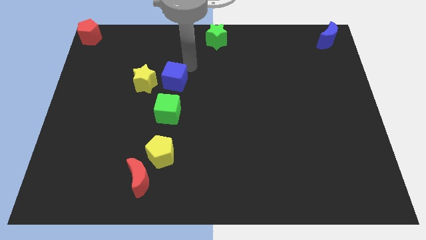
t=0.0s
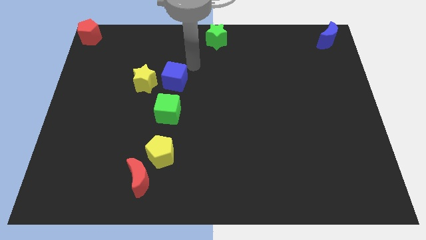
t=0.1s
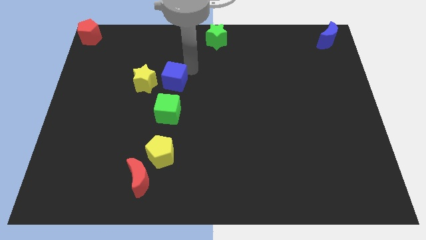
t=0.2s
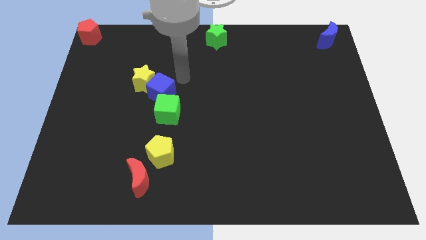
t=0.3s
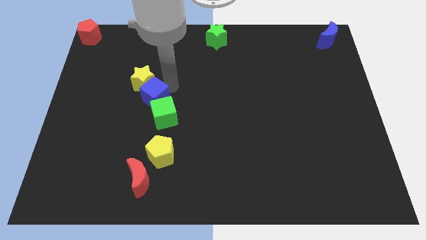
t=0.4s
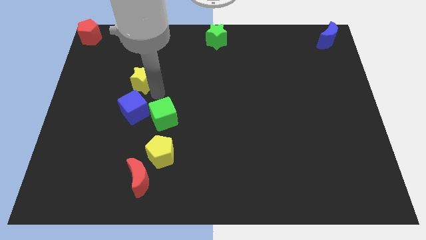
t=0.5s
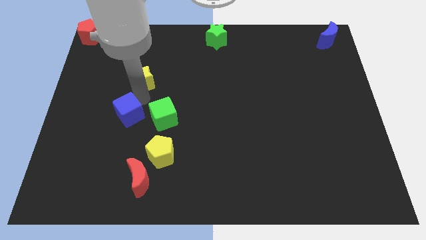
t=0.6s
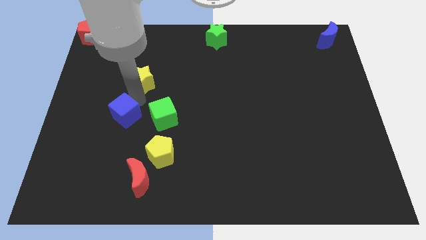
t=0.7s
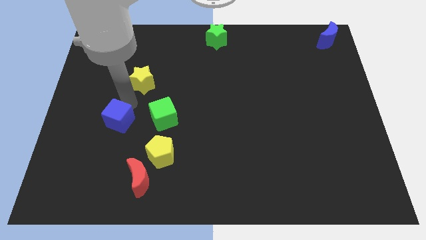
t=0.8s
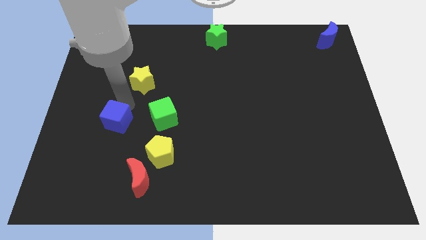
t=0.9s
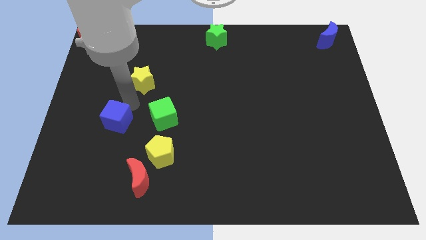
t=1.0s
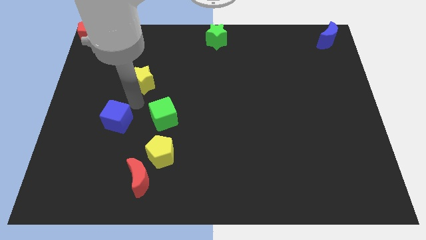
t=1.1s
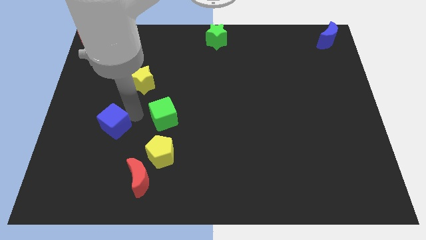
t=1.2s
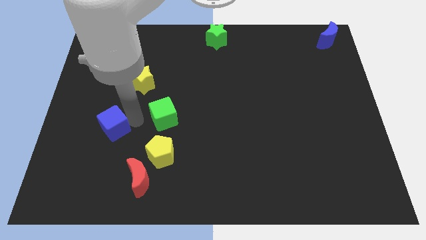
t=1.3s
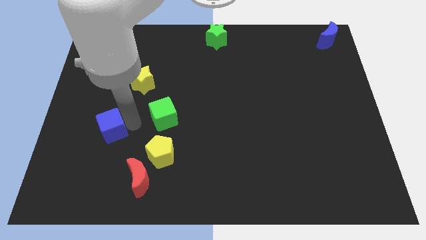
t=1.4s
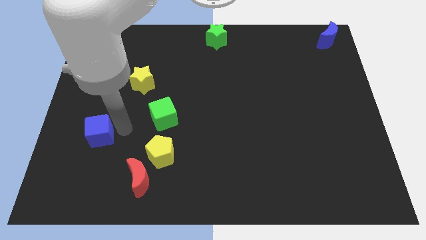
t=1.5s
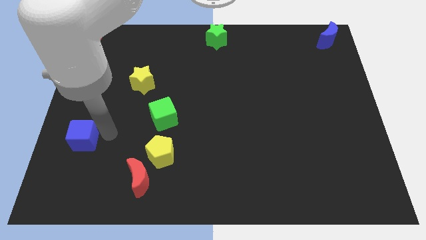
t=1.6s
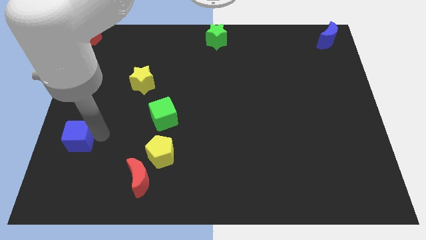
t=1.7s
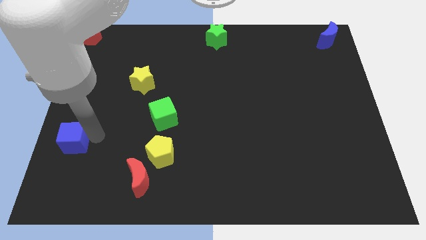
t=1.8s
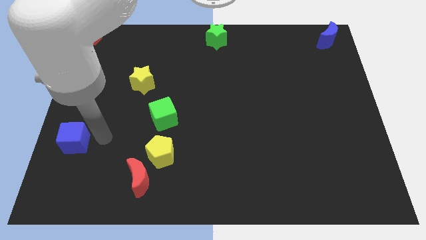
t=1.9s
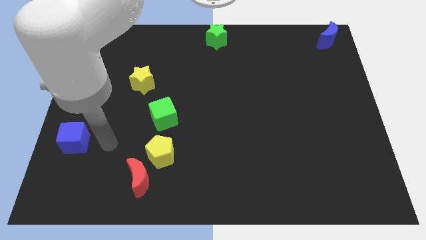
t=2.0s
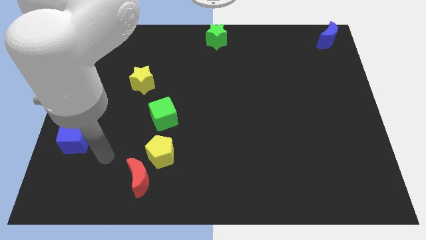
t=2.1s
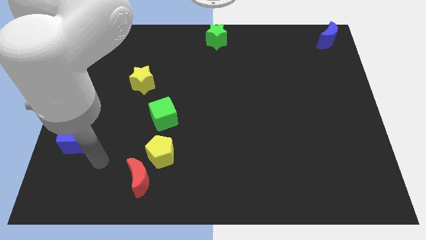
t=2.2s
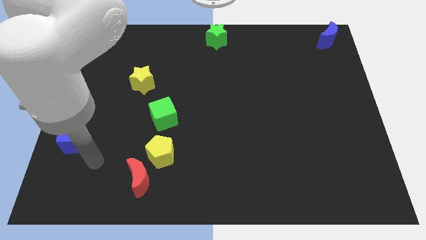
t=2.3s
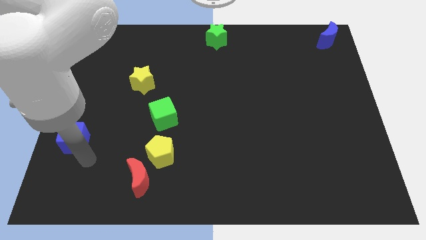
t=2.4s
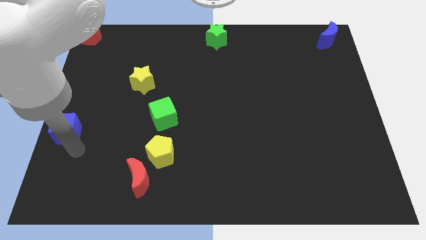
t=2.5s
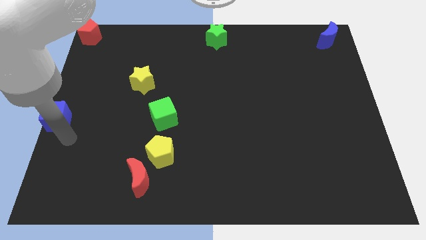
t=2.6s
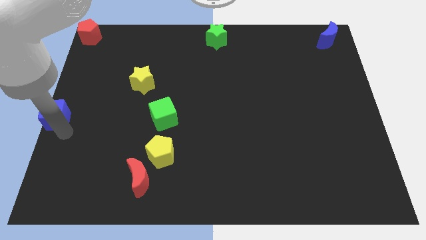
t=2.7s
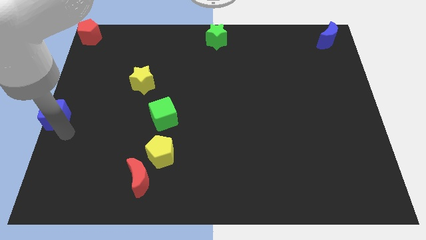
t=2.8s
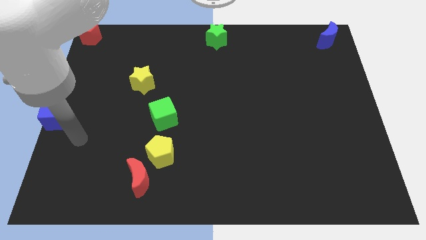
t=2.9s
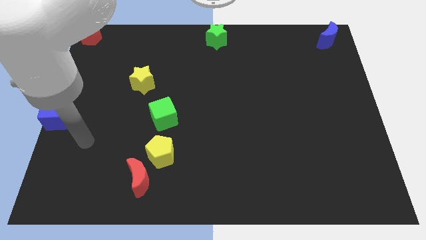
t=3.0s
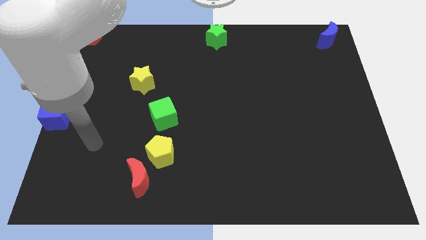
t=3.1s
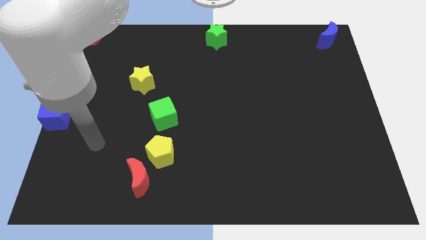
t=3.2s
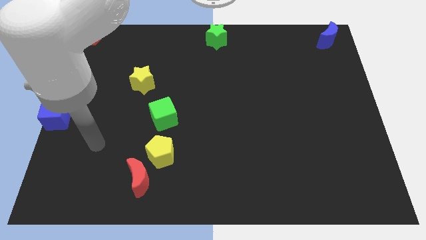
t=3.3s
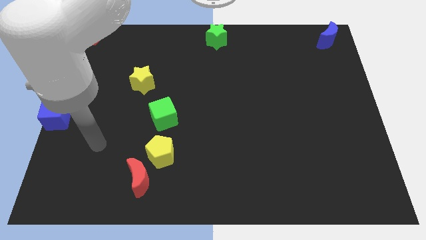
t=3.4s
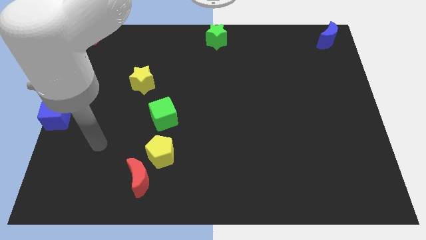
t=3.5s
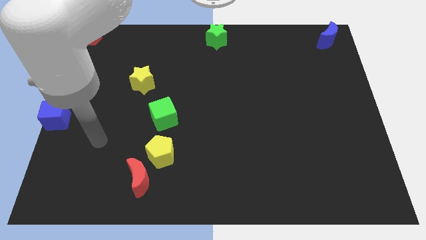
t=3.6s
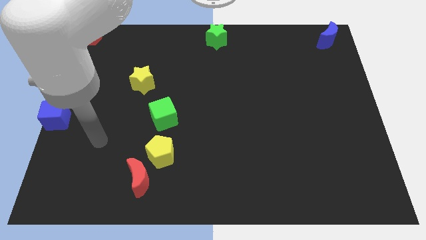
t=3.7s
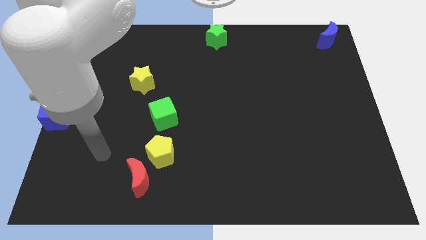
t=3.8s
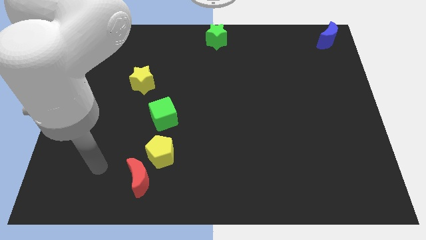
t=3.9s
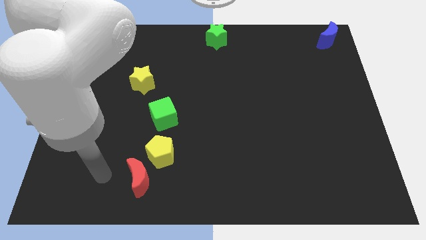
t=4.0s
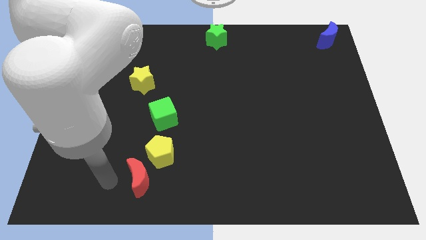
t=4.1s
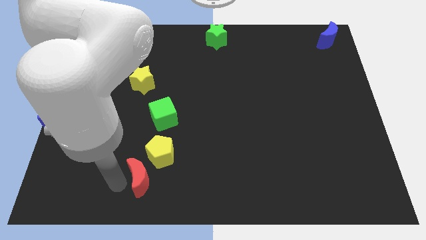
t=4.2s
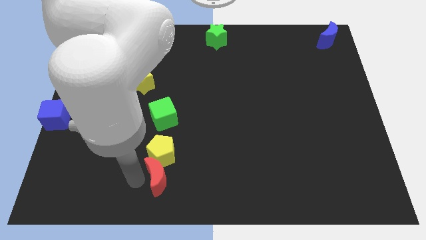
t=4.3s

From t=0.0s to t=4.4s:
place the blue cube towards the center left side of the board

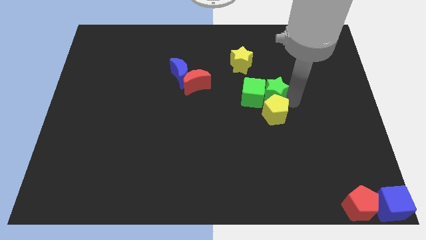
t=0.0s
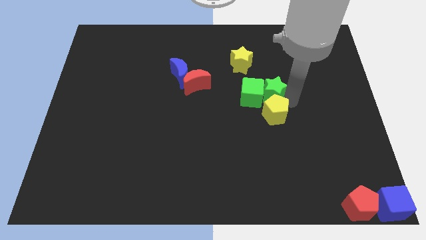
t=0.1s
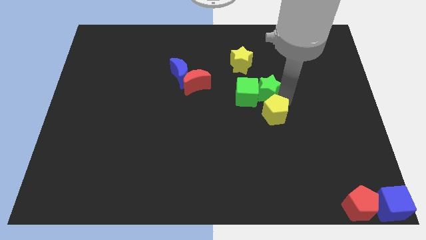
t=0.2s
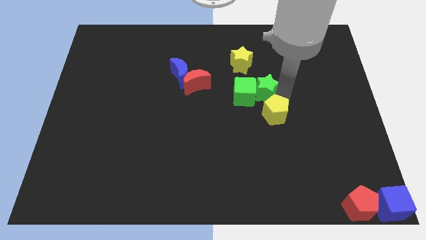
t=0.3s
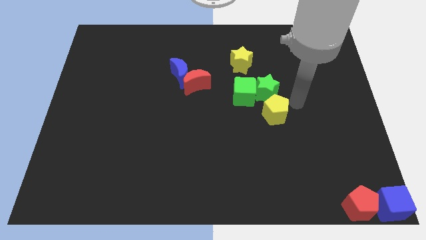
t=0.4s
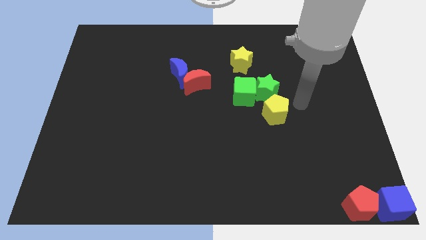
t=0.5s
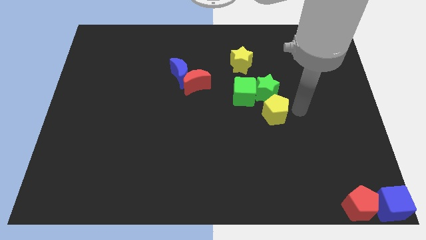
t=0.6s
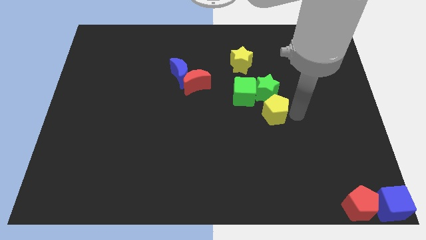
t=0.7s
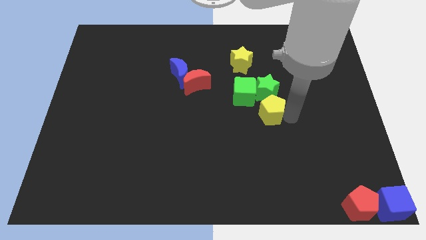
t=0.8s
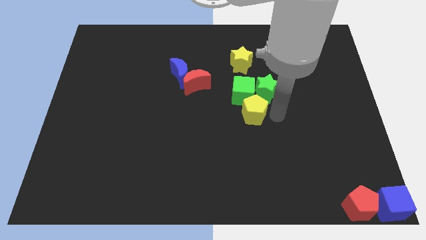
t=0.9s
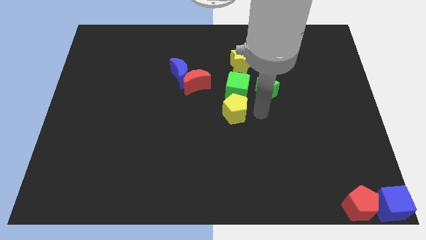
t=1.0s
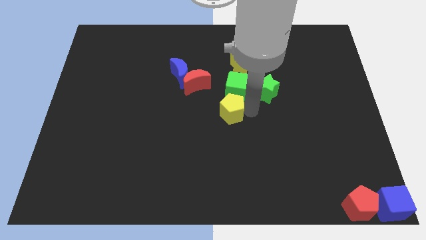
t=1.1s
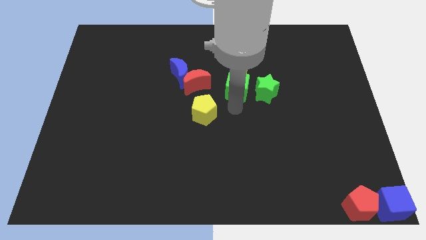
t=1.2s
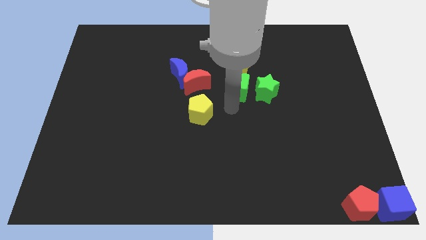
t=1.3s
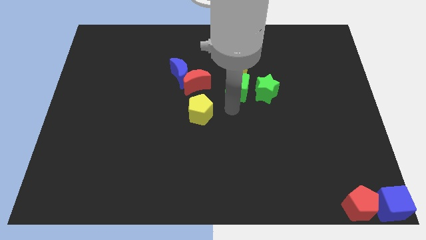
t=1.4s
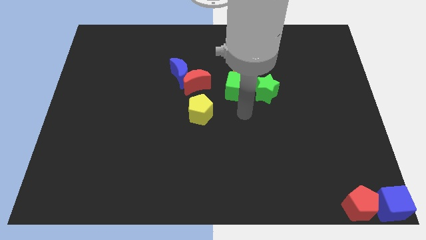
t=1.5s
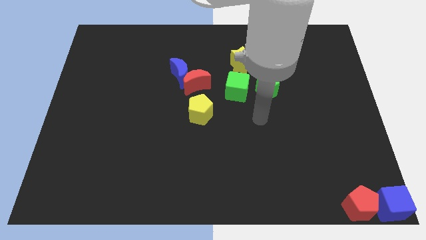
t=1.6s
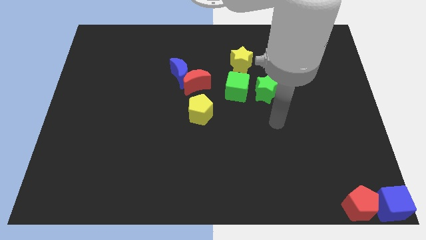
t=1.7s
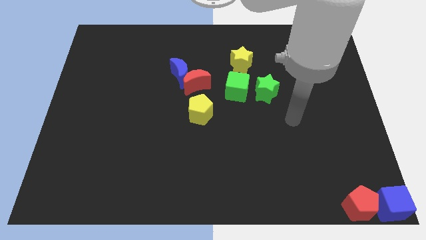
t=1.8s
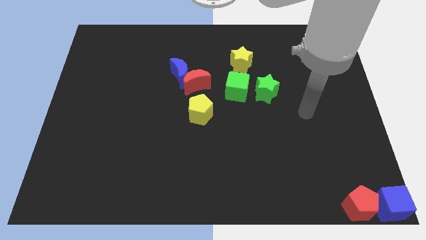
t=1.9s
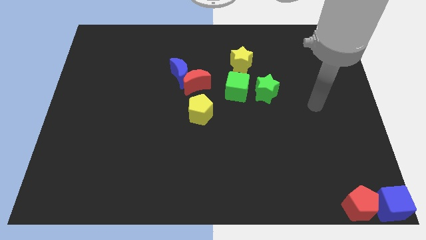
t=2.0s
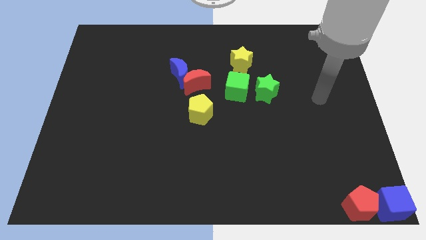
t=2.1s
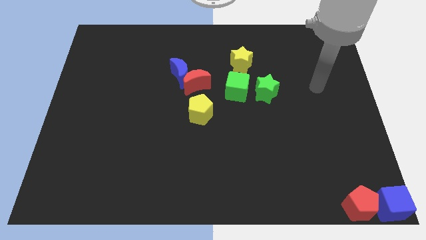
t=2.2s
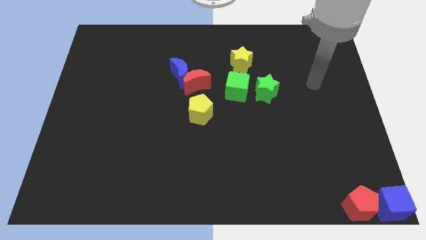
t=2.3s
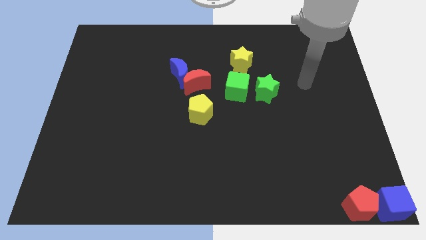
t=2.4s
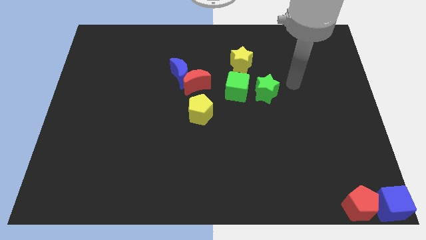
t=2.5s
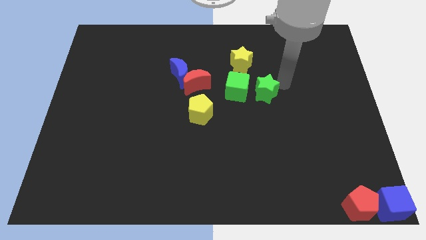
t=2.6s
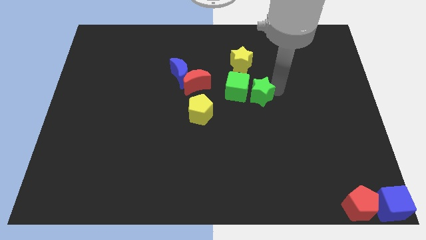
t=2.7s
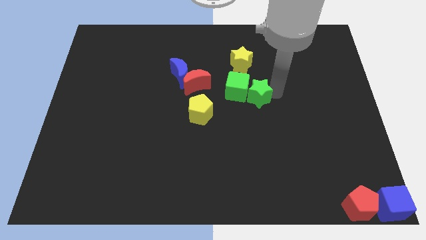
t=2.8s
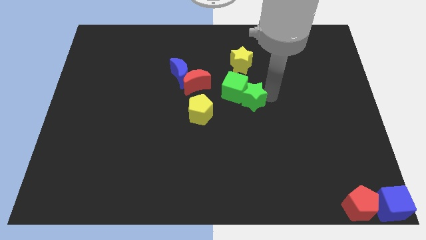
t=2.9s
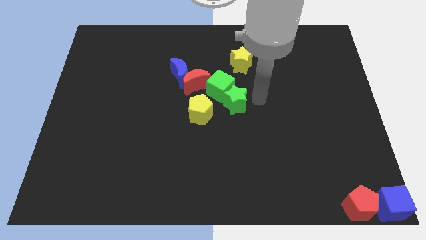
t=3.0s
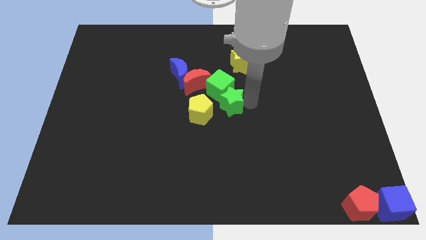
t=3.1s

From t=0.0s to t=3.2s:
place the yellow pentagon below the red moon

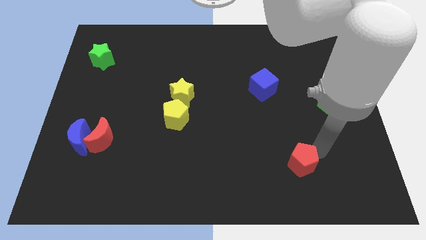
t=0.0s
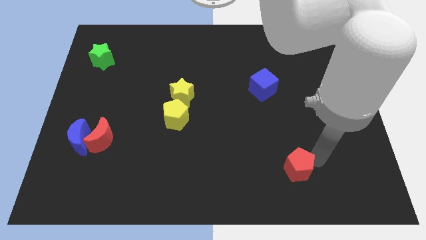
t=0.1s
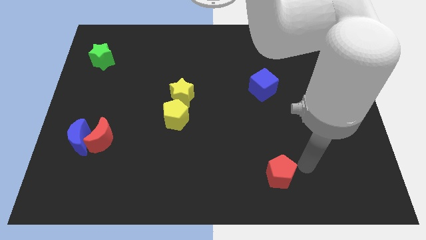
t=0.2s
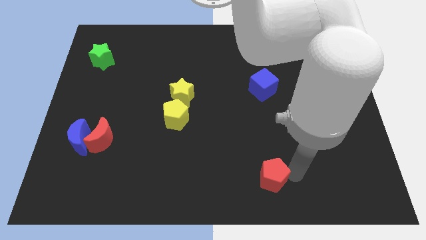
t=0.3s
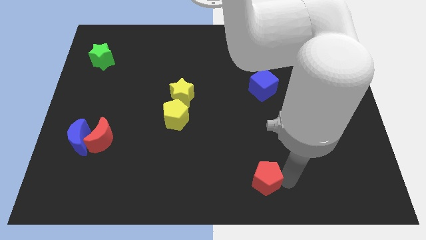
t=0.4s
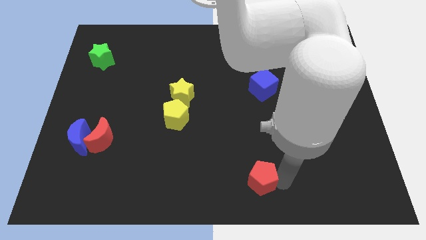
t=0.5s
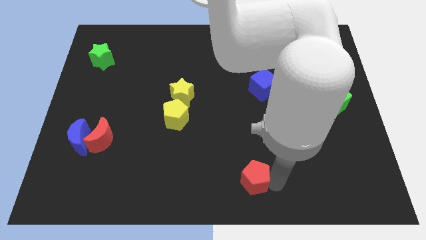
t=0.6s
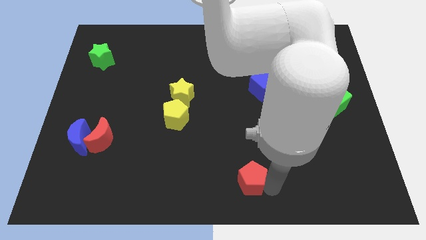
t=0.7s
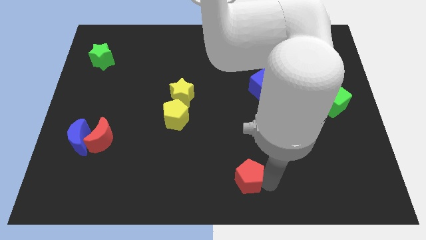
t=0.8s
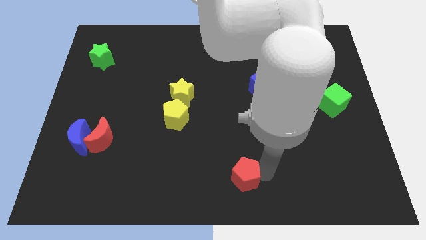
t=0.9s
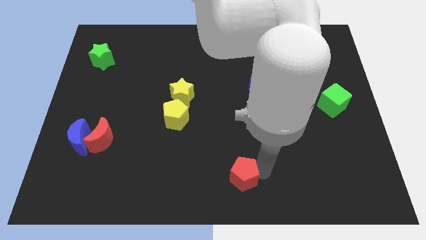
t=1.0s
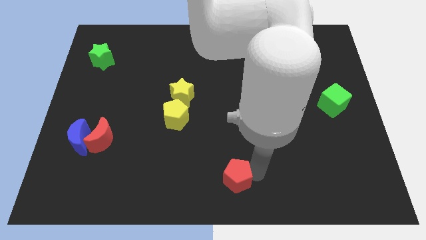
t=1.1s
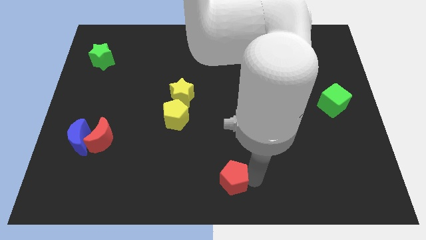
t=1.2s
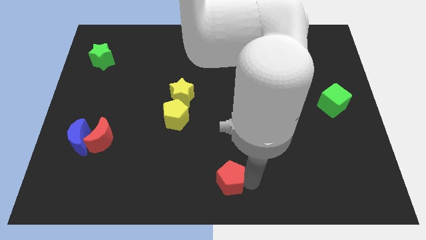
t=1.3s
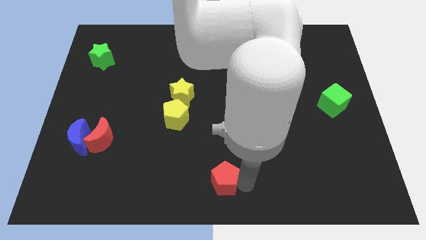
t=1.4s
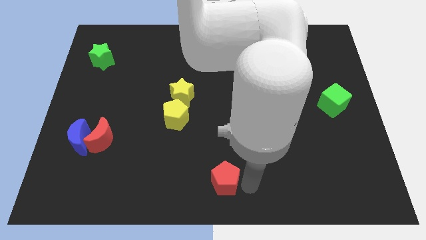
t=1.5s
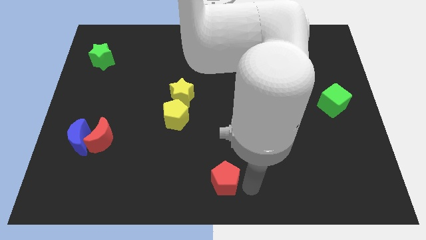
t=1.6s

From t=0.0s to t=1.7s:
put the red pentagon at the bottom center of the board
